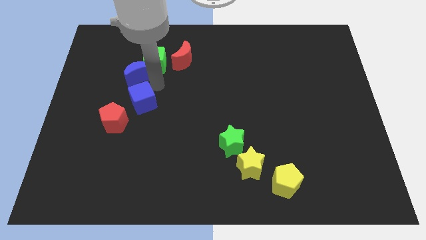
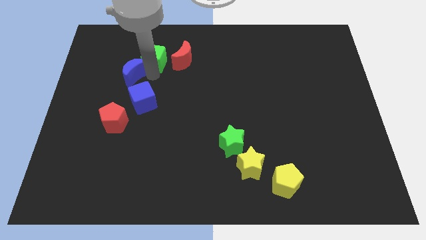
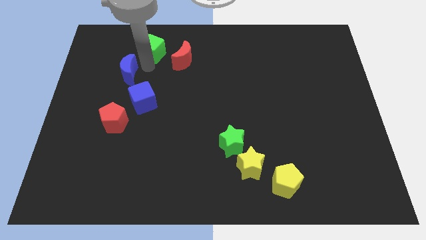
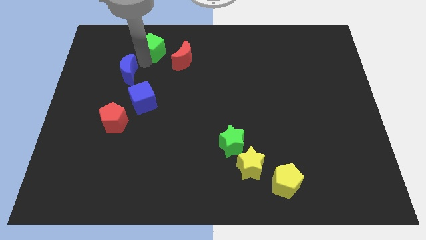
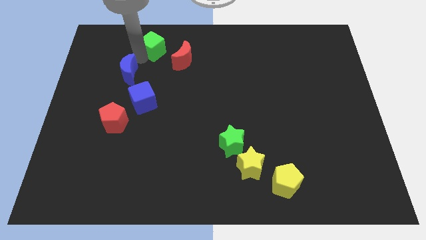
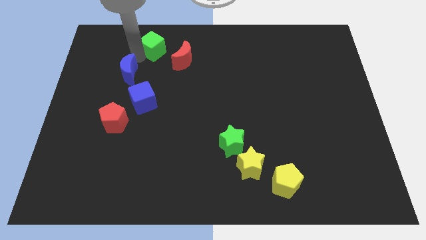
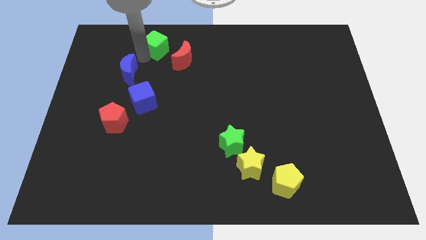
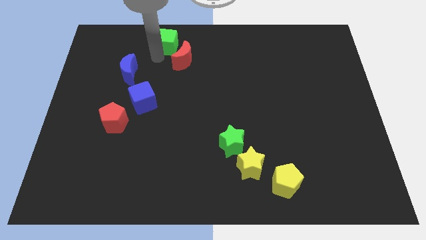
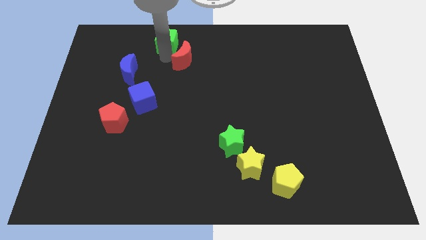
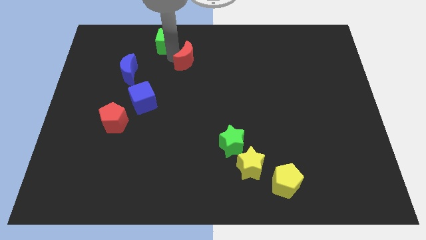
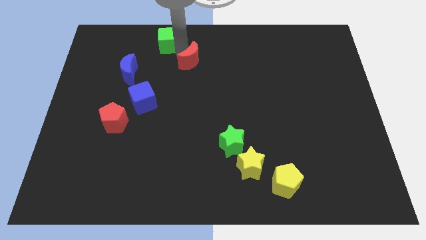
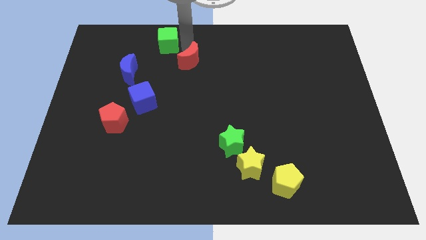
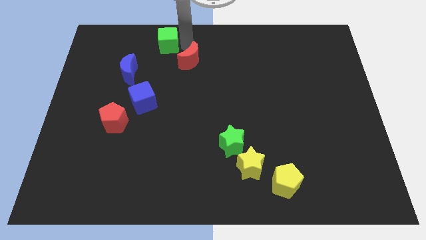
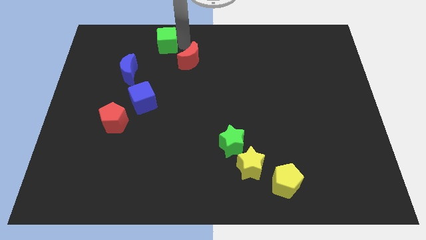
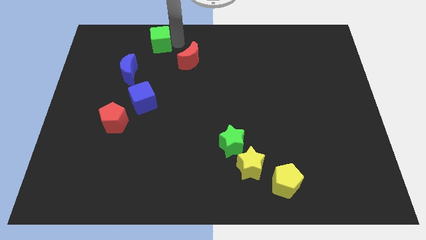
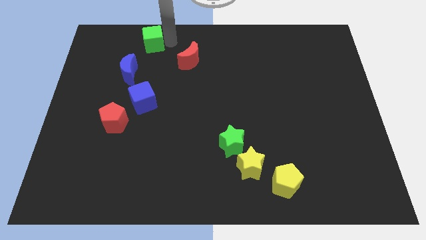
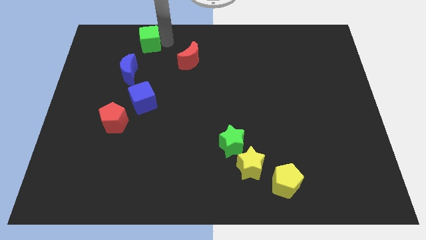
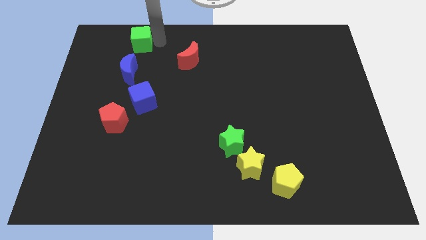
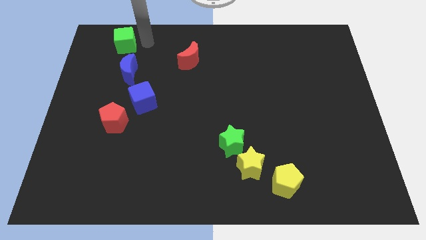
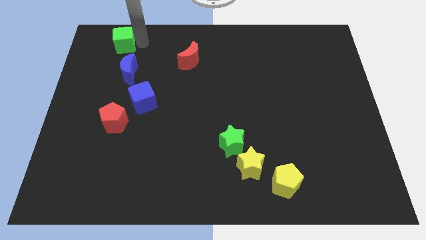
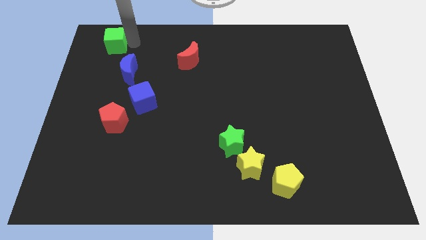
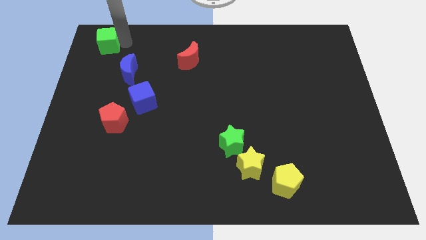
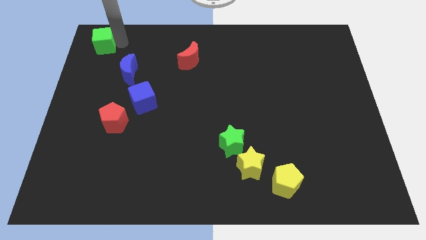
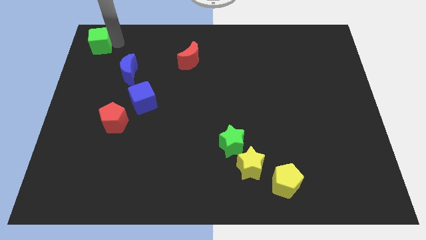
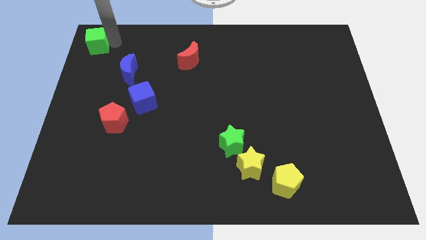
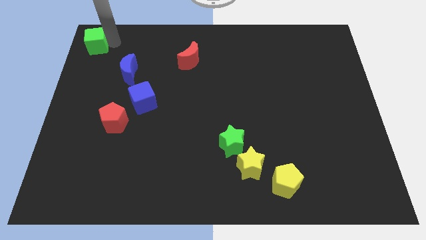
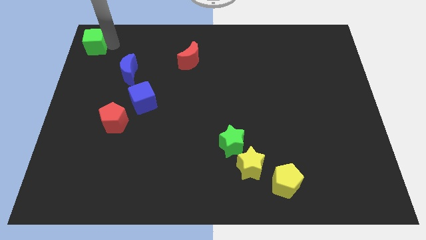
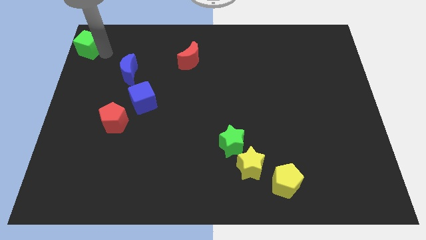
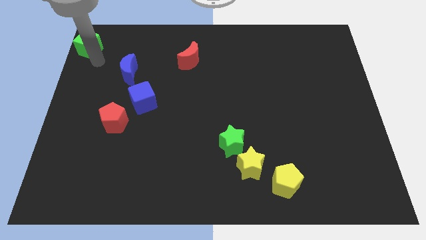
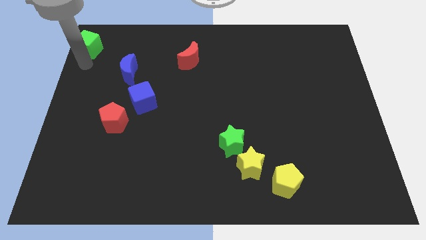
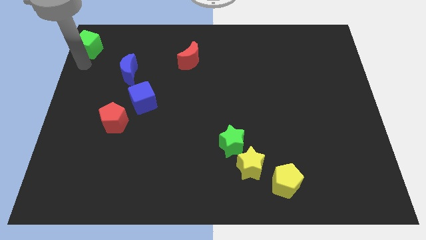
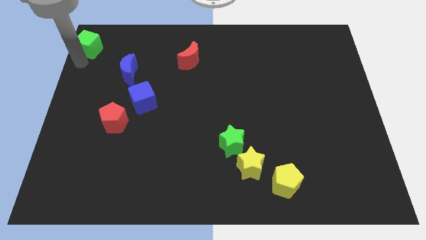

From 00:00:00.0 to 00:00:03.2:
push the green cube to the top left side of the table

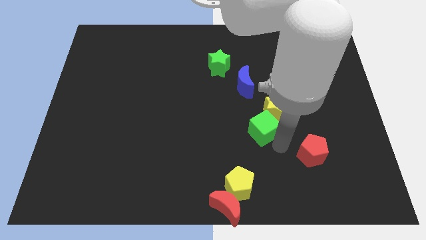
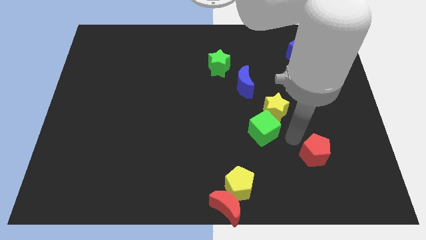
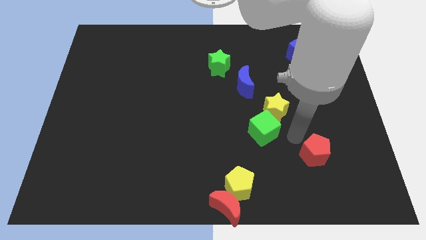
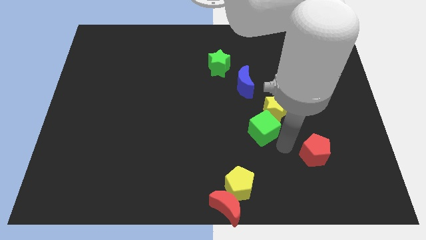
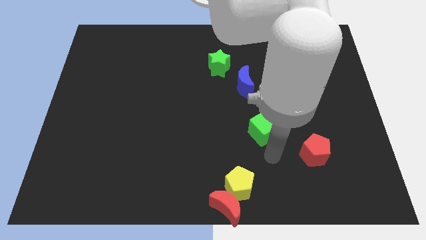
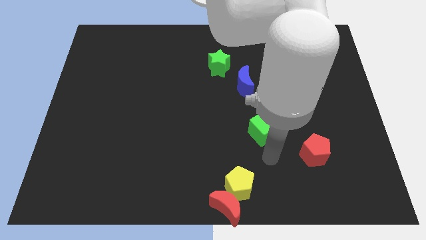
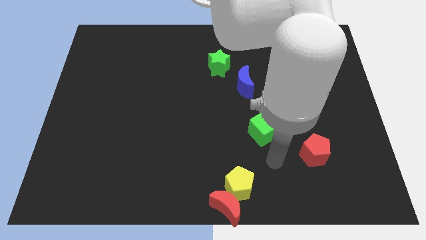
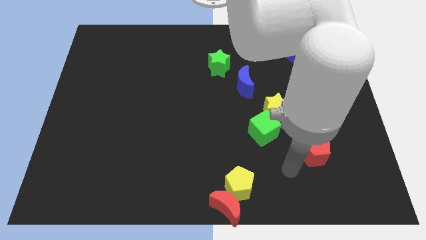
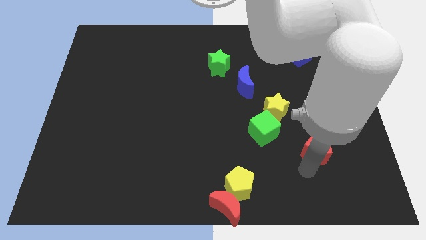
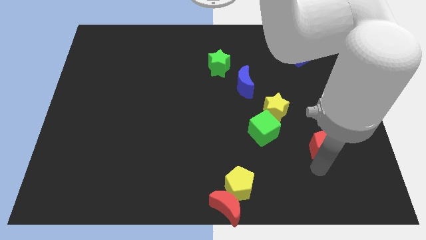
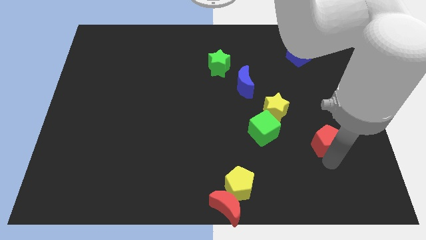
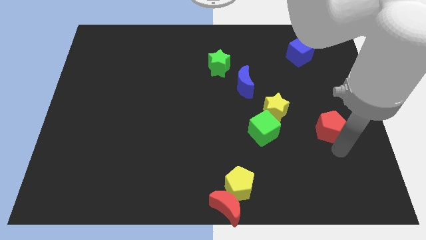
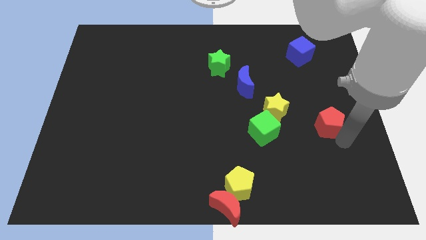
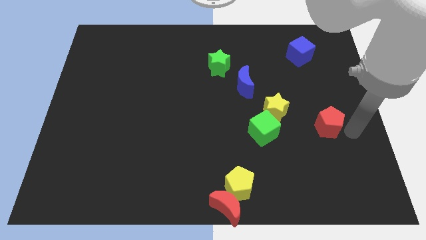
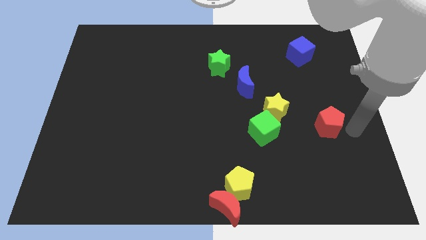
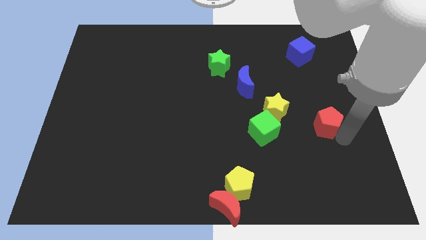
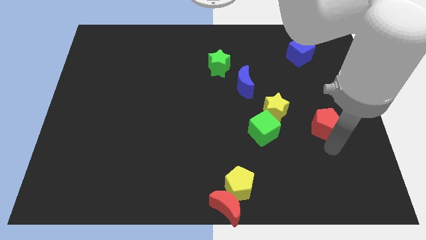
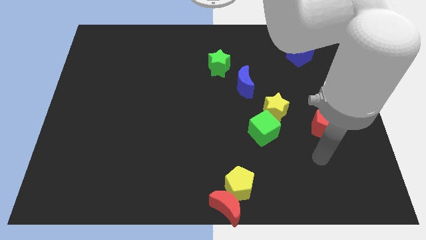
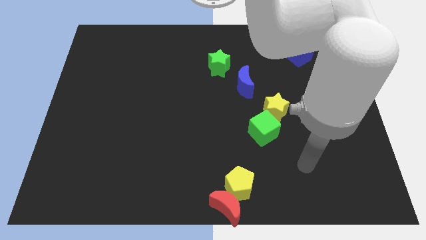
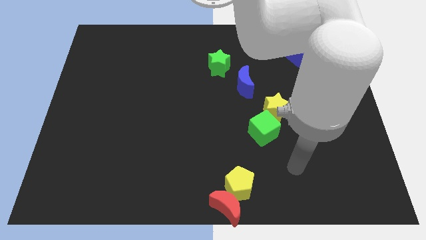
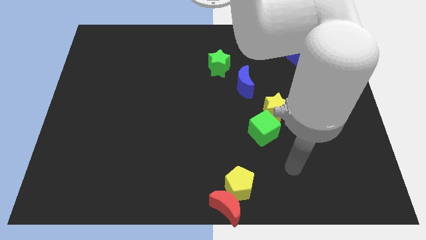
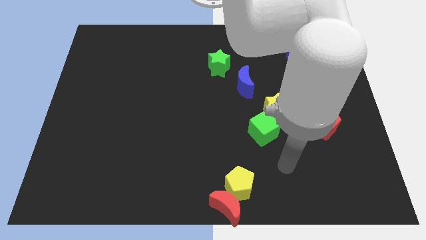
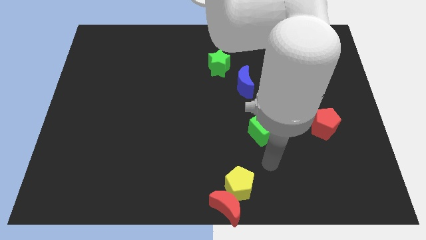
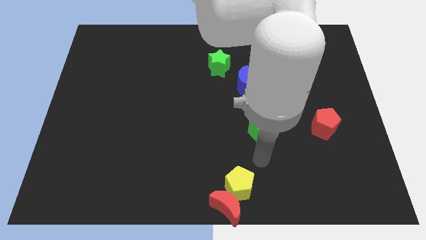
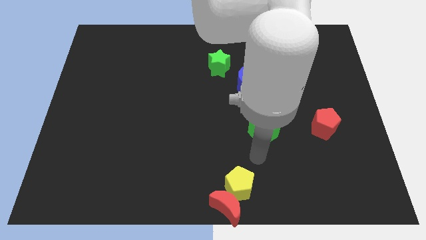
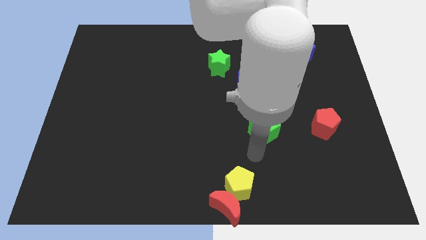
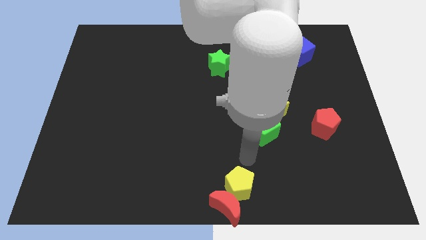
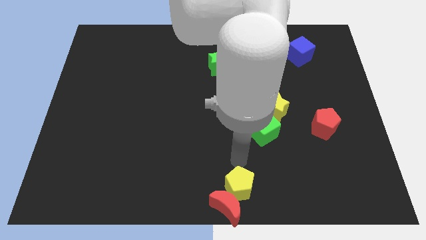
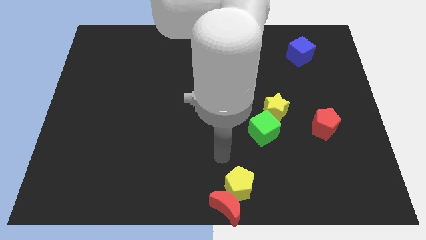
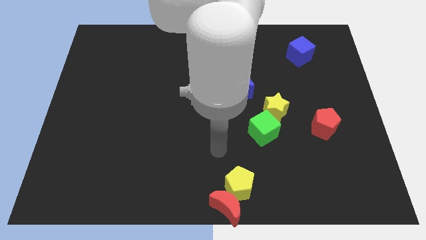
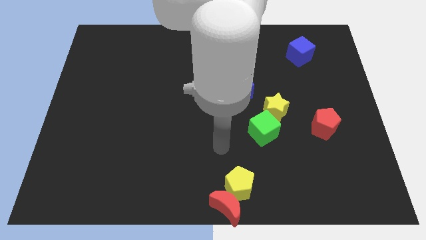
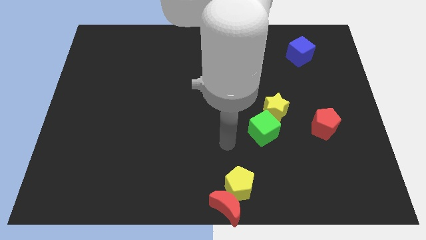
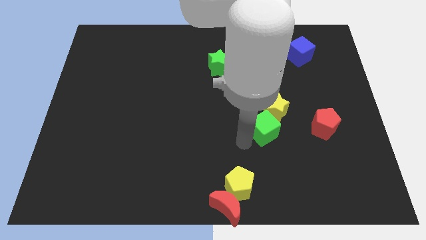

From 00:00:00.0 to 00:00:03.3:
move the red pentagon horizontally to the right side of the green cube

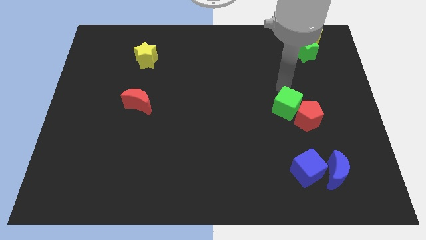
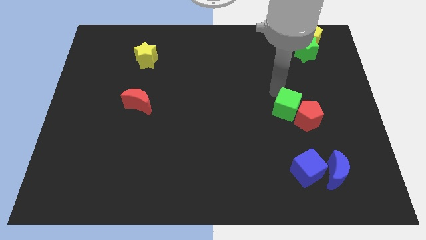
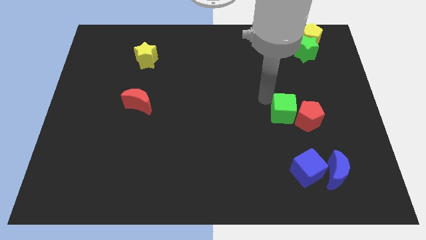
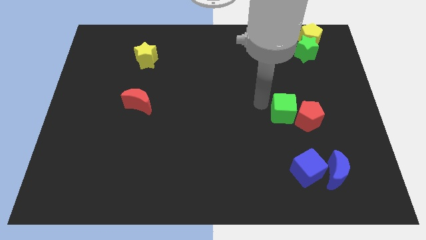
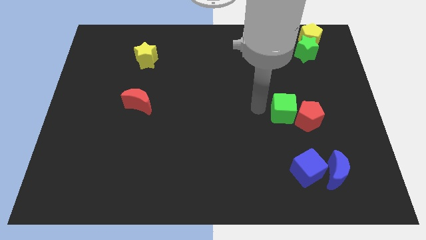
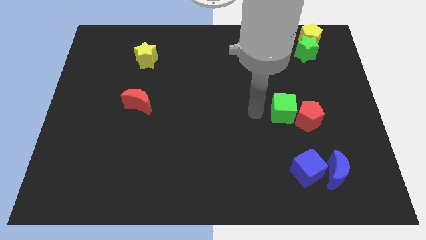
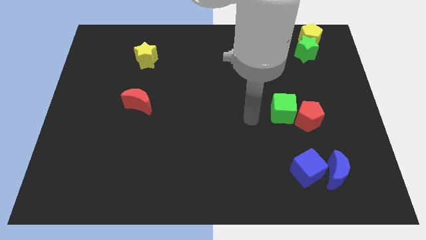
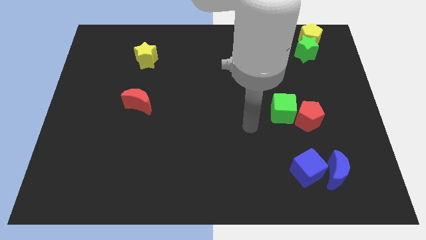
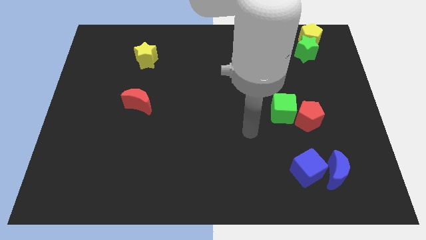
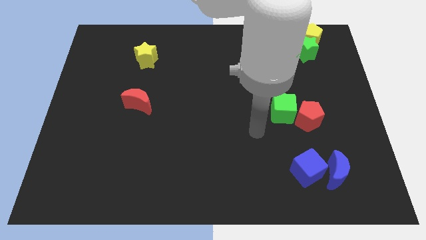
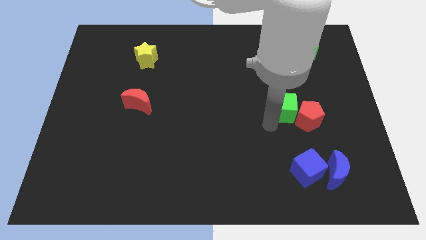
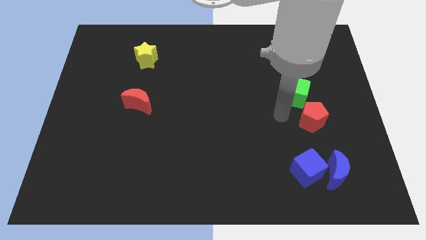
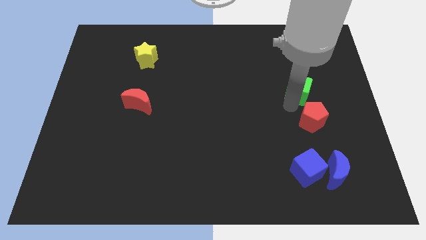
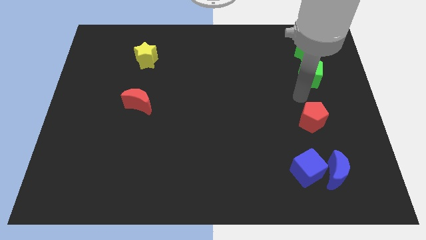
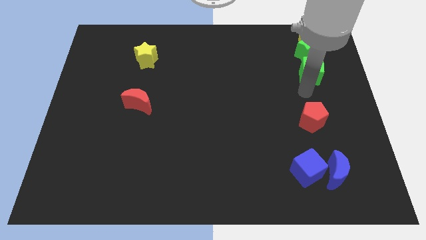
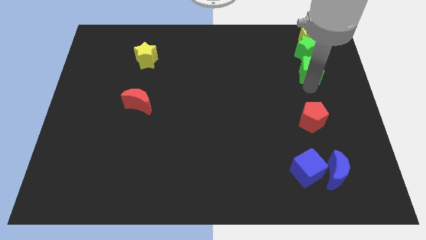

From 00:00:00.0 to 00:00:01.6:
move the green cube towards green star

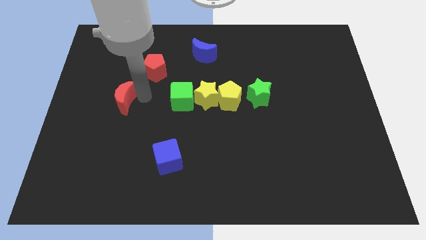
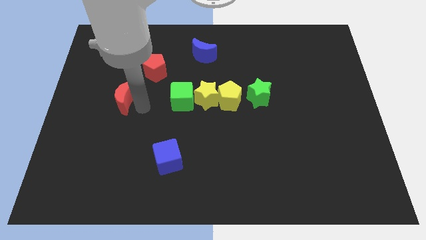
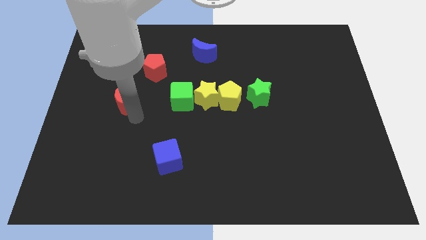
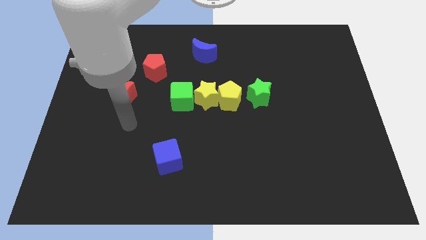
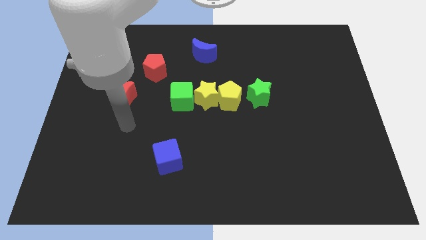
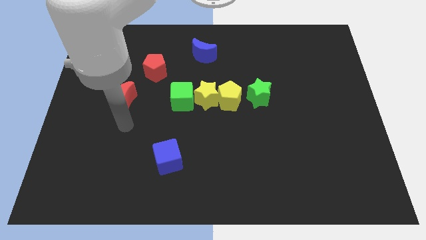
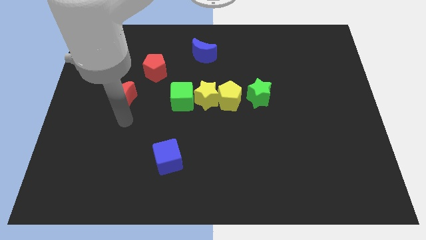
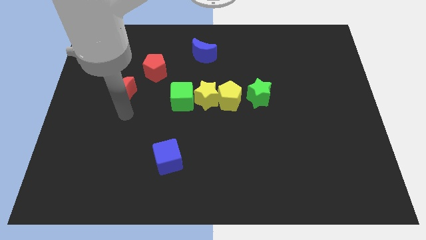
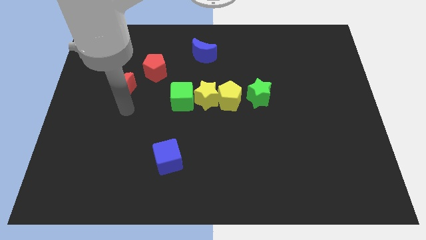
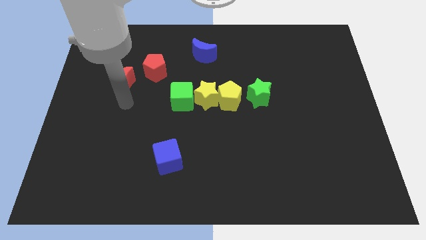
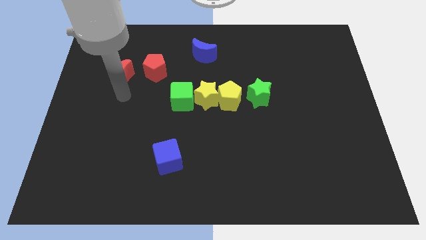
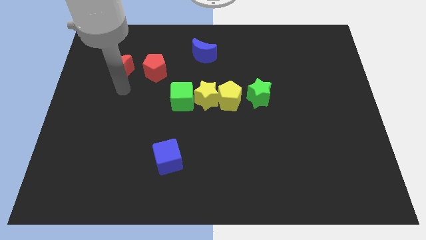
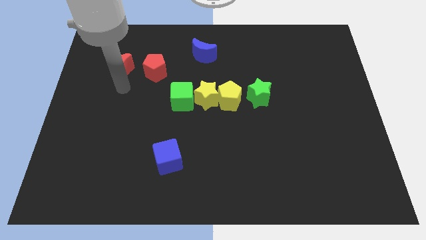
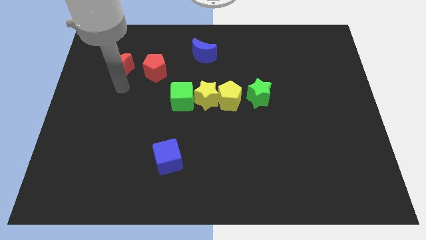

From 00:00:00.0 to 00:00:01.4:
push the red moon upwards
